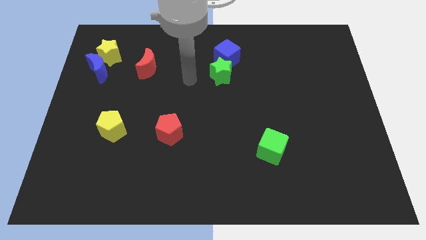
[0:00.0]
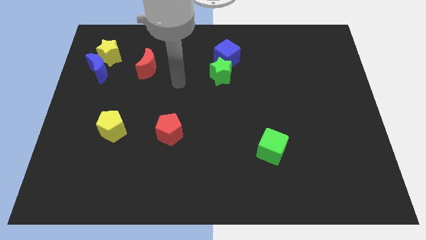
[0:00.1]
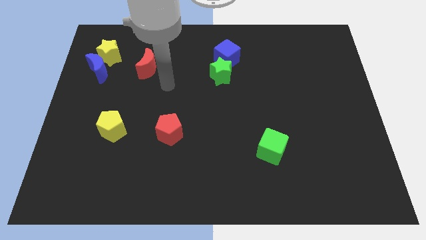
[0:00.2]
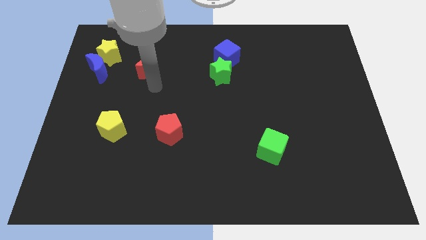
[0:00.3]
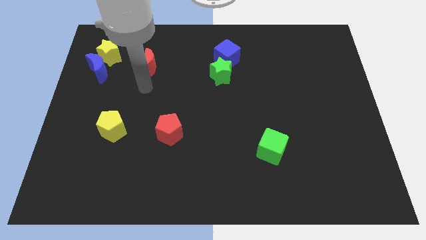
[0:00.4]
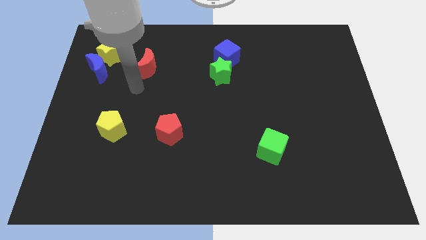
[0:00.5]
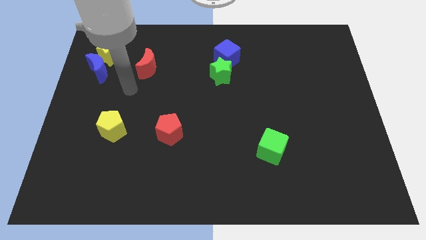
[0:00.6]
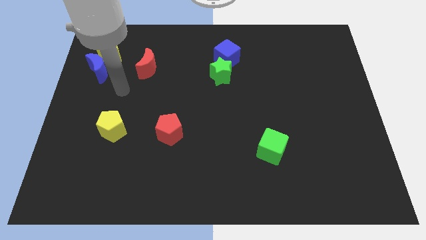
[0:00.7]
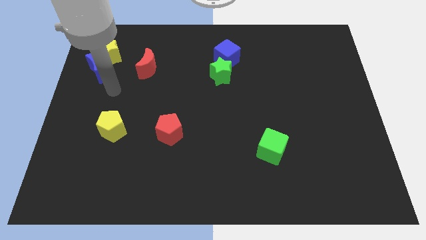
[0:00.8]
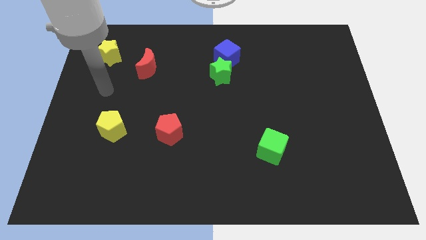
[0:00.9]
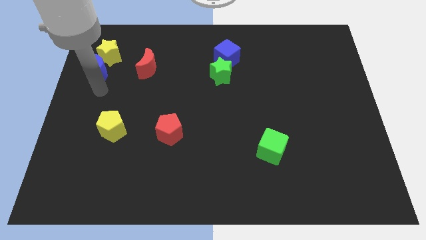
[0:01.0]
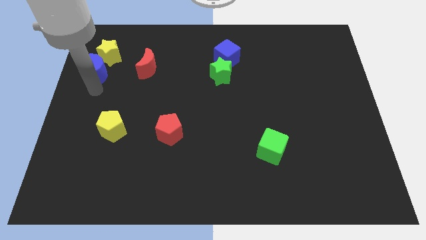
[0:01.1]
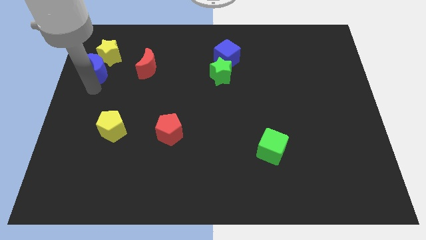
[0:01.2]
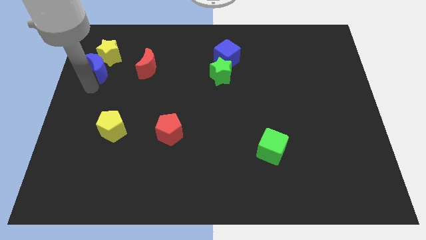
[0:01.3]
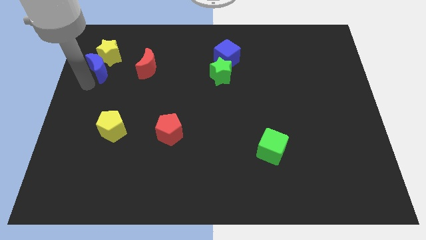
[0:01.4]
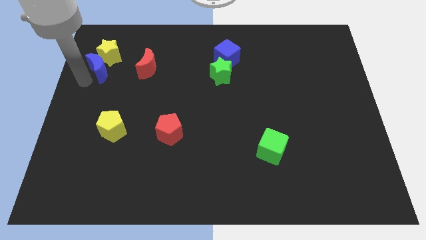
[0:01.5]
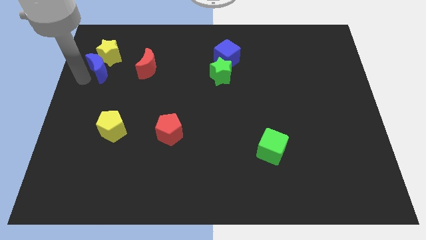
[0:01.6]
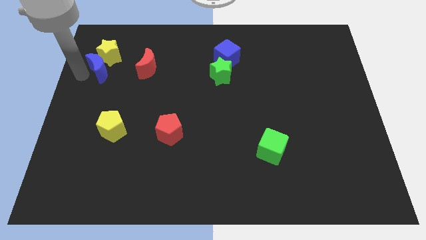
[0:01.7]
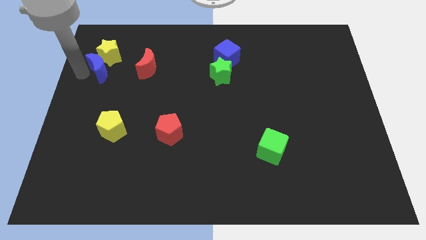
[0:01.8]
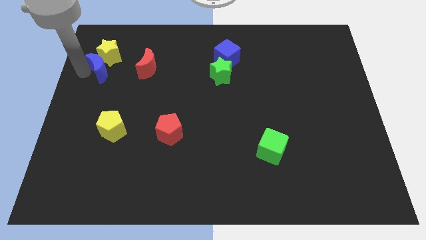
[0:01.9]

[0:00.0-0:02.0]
move your arm to the left side of the blue moon

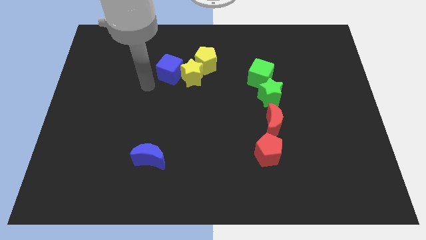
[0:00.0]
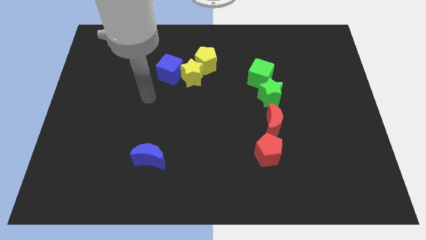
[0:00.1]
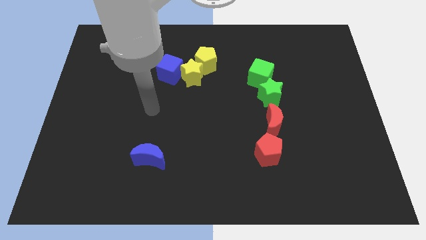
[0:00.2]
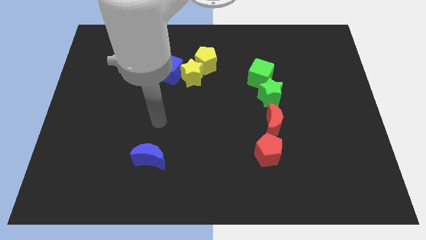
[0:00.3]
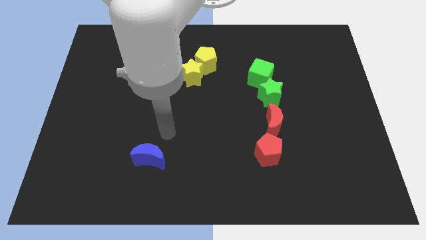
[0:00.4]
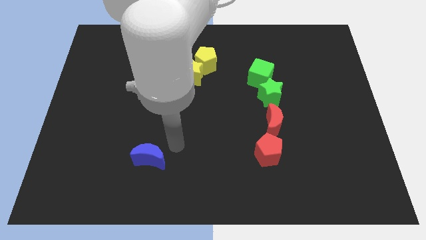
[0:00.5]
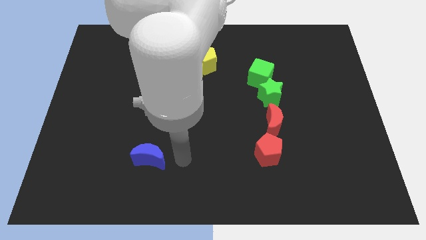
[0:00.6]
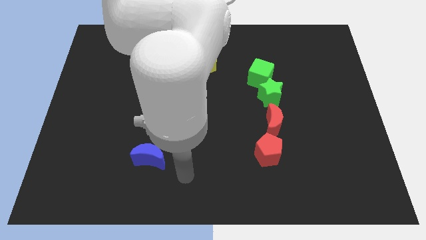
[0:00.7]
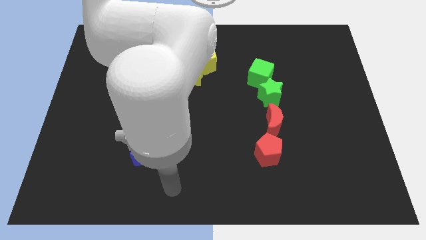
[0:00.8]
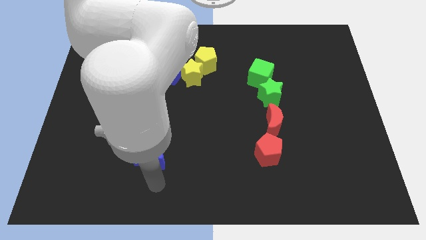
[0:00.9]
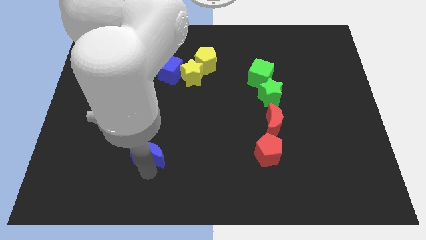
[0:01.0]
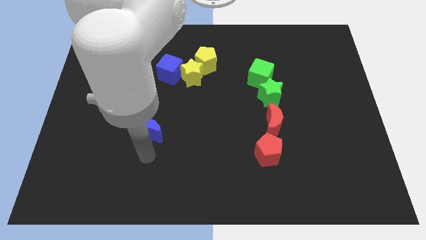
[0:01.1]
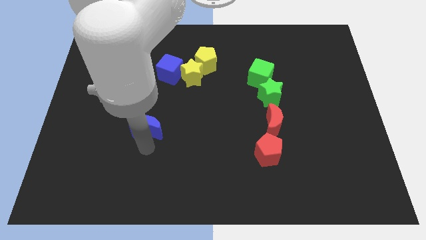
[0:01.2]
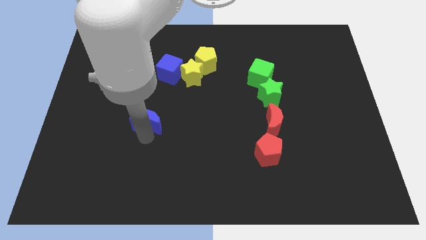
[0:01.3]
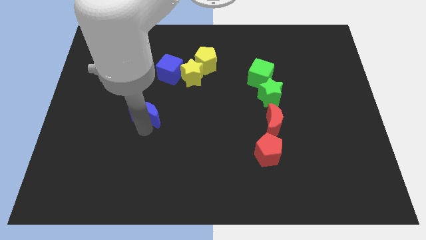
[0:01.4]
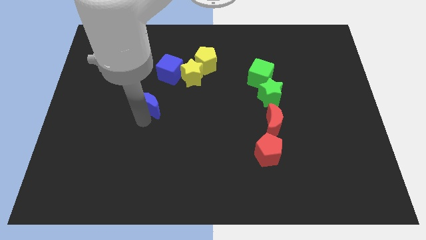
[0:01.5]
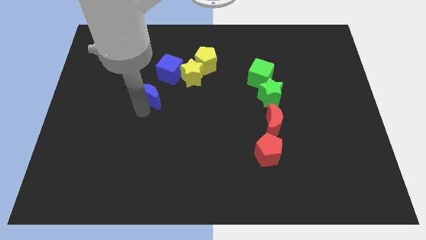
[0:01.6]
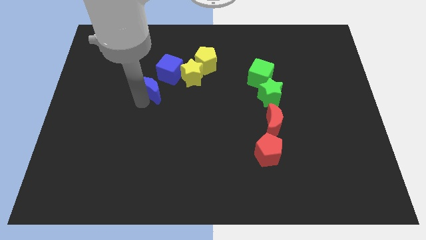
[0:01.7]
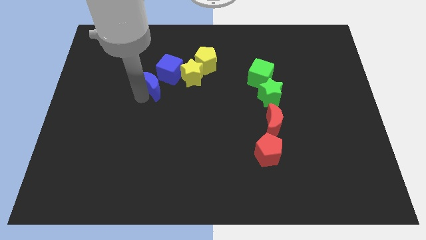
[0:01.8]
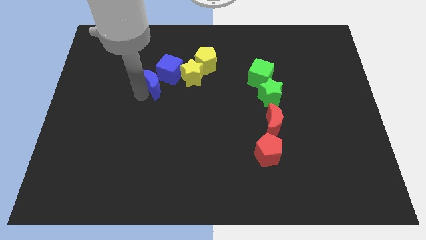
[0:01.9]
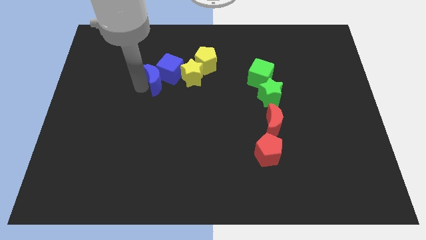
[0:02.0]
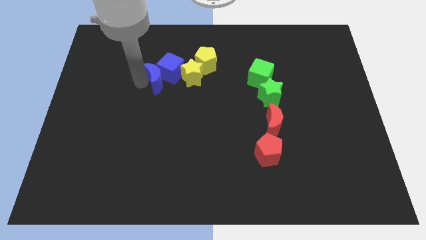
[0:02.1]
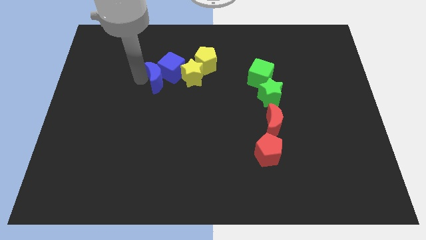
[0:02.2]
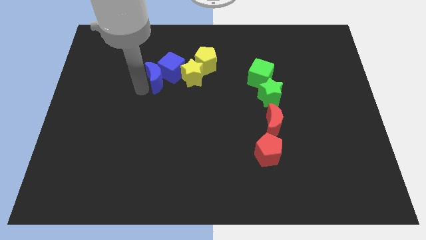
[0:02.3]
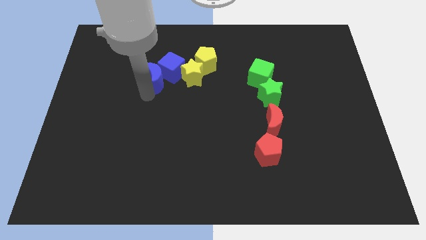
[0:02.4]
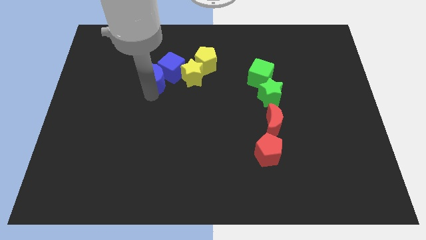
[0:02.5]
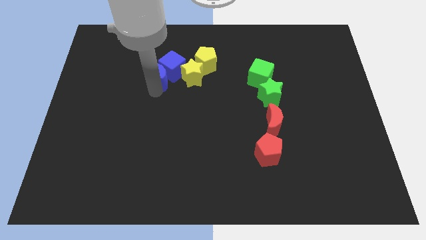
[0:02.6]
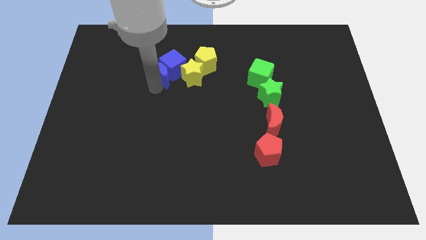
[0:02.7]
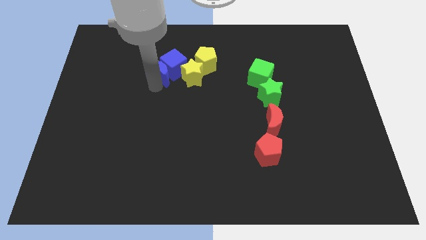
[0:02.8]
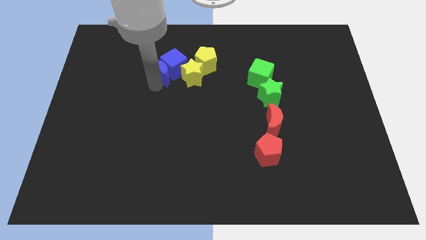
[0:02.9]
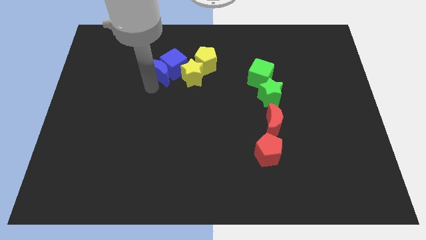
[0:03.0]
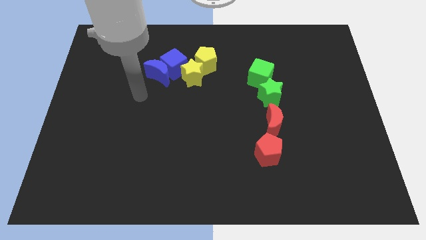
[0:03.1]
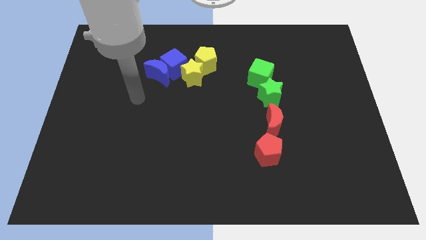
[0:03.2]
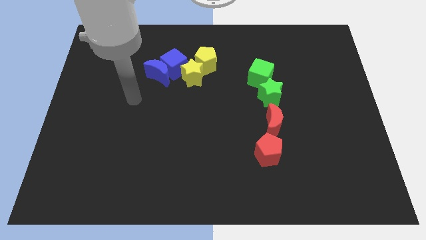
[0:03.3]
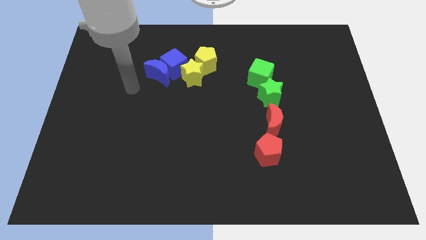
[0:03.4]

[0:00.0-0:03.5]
slide blue moon to the bottom side of blue cube

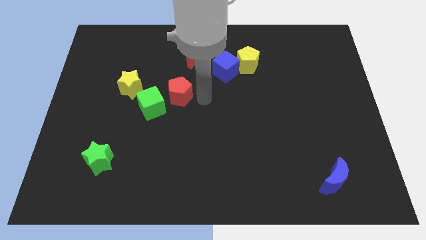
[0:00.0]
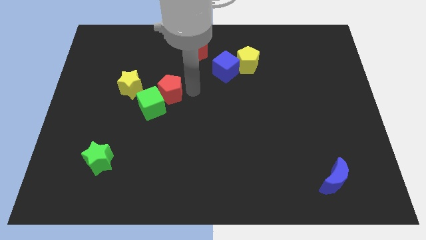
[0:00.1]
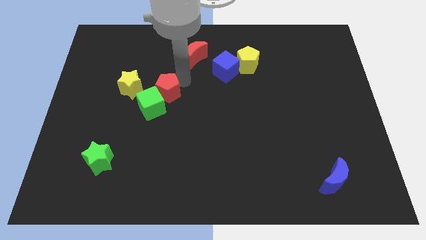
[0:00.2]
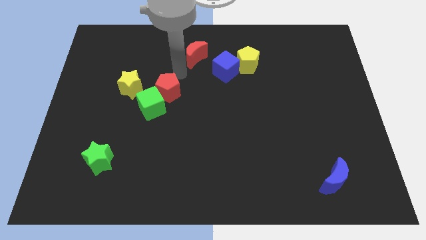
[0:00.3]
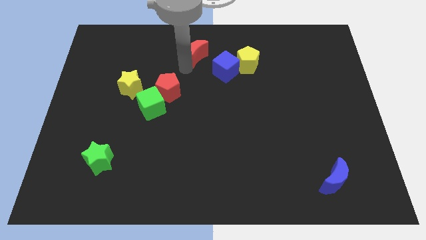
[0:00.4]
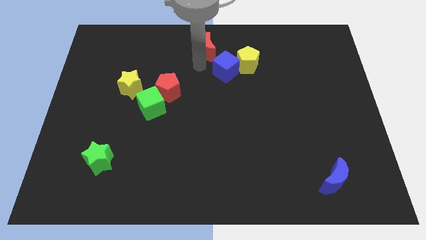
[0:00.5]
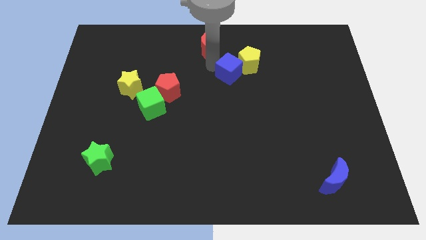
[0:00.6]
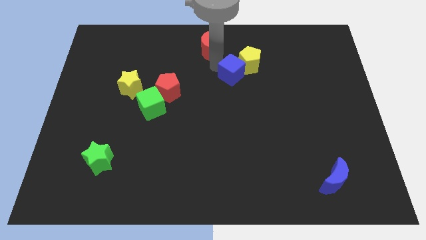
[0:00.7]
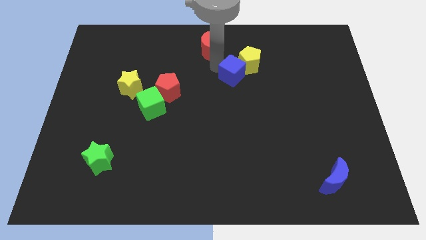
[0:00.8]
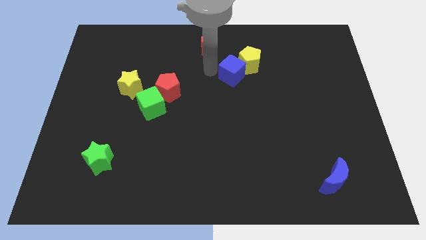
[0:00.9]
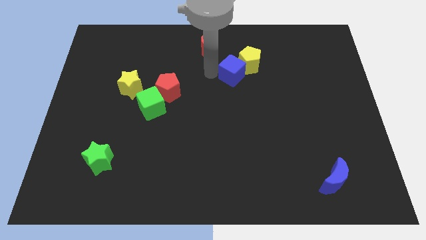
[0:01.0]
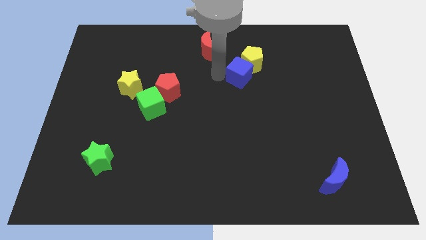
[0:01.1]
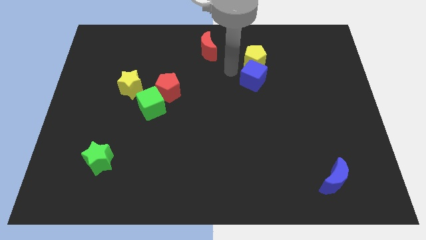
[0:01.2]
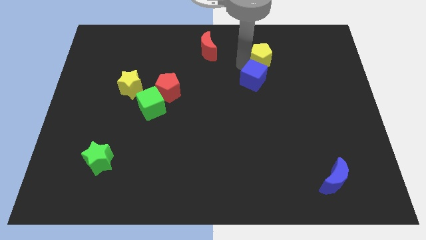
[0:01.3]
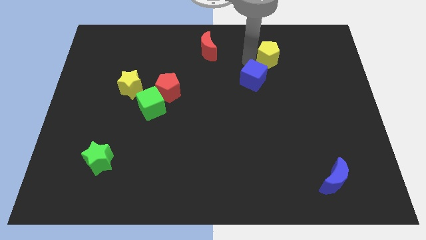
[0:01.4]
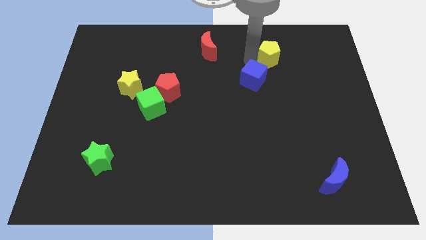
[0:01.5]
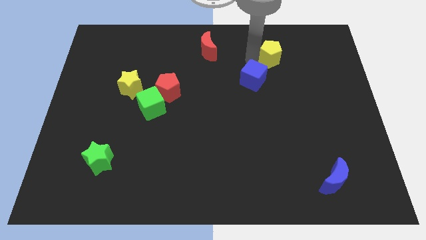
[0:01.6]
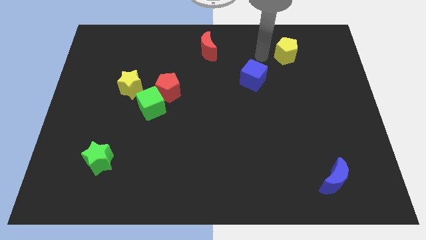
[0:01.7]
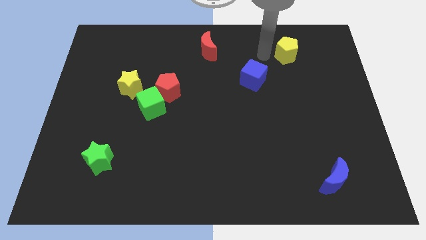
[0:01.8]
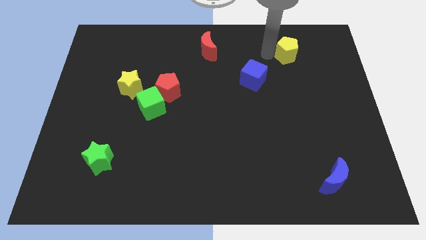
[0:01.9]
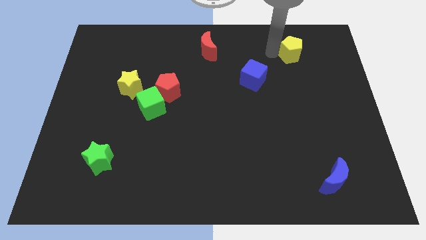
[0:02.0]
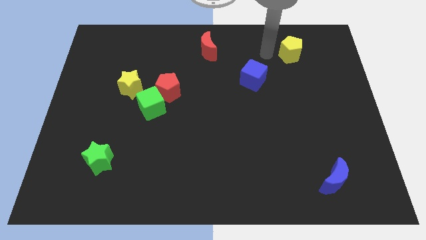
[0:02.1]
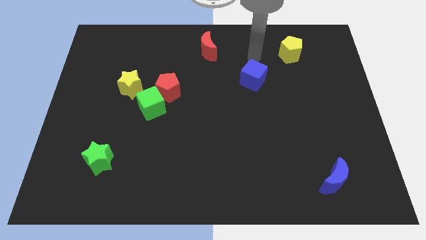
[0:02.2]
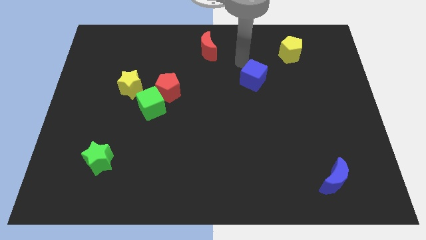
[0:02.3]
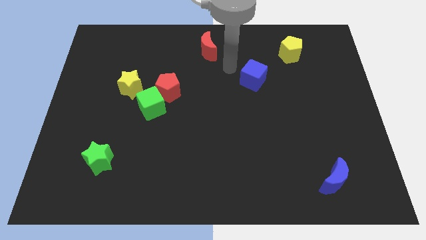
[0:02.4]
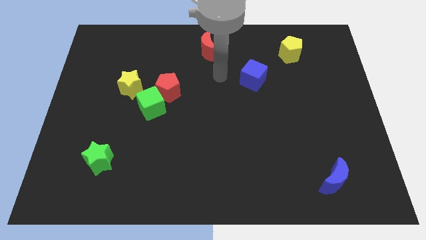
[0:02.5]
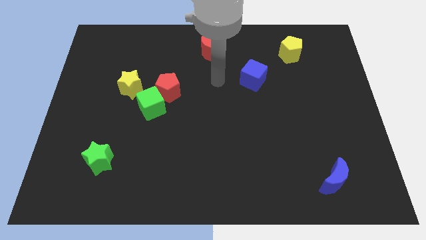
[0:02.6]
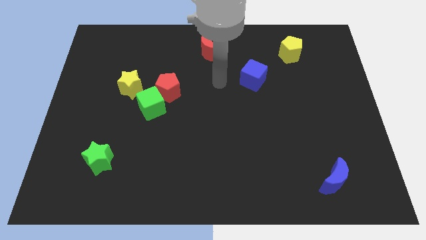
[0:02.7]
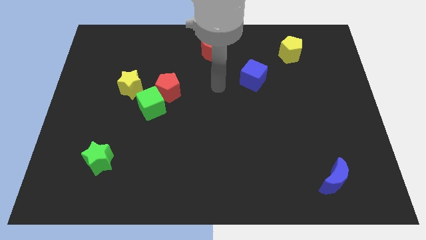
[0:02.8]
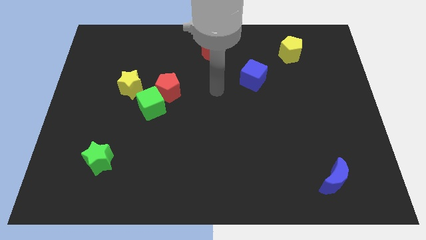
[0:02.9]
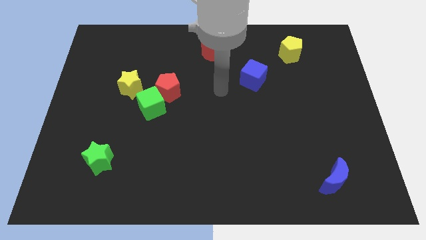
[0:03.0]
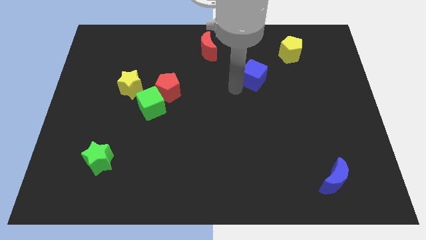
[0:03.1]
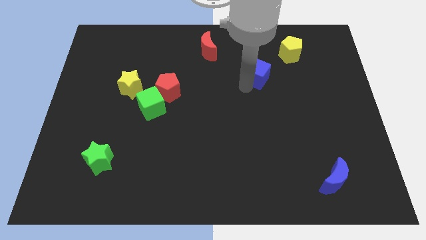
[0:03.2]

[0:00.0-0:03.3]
separate the yellow pentagon from the blue cube

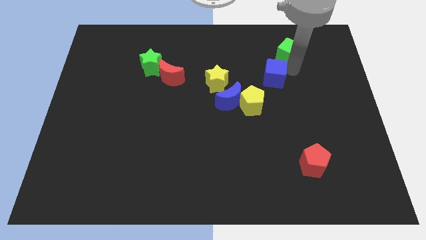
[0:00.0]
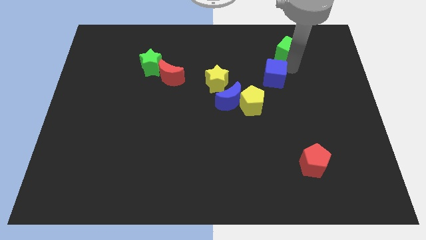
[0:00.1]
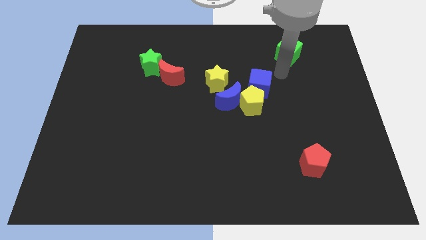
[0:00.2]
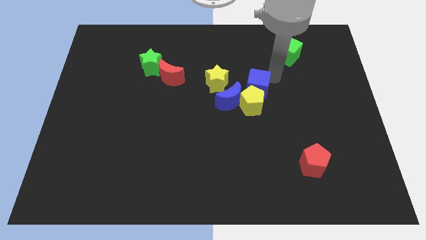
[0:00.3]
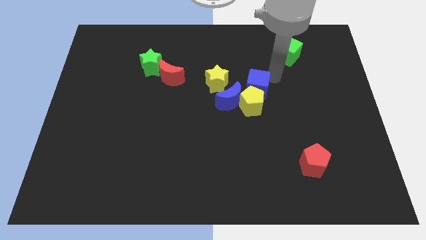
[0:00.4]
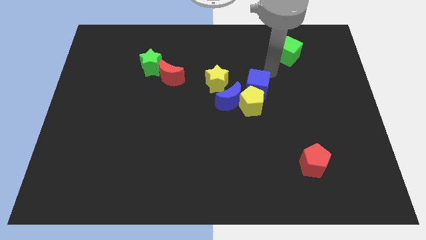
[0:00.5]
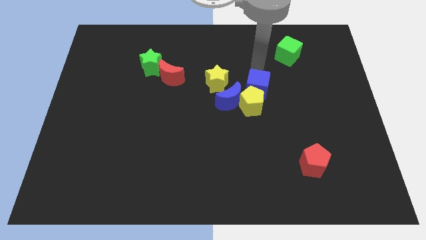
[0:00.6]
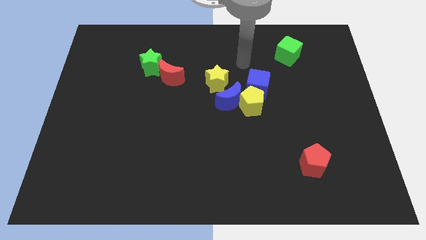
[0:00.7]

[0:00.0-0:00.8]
separate the blue cube from the green cube
